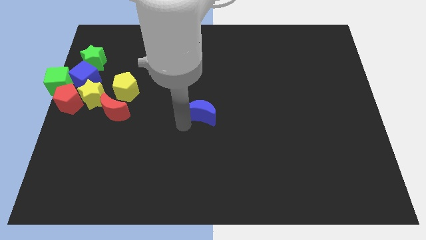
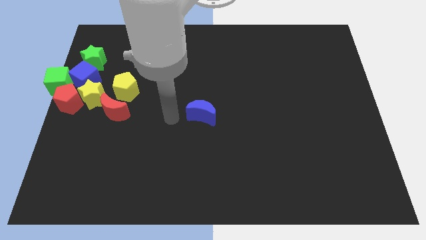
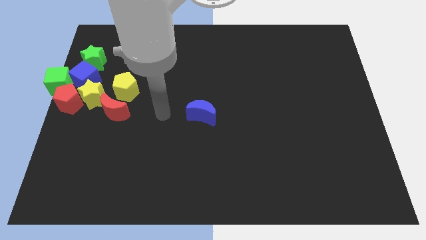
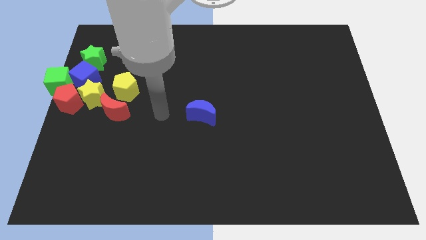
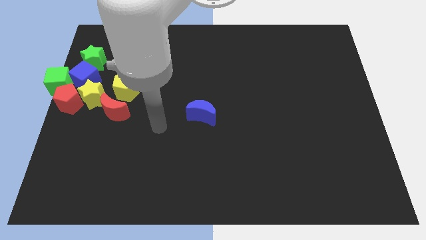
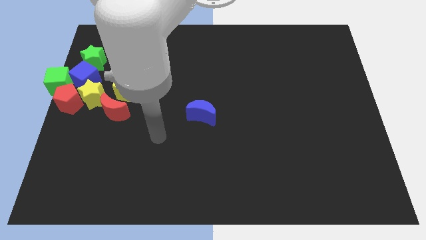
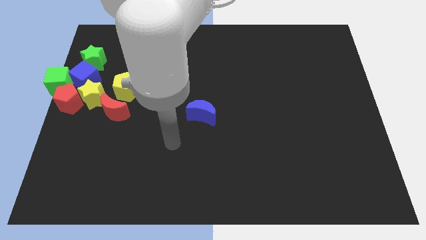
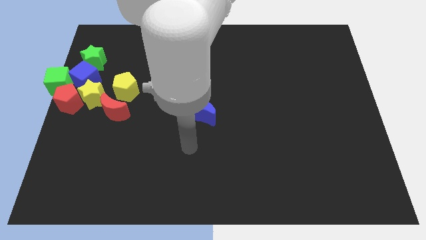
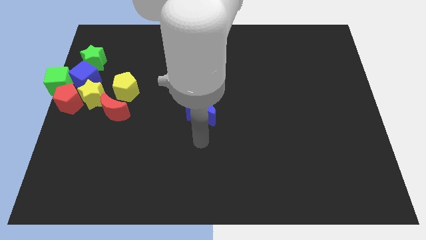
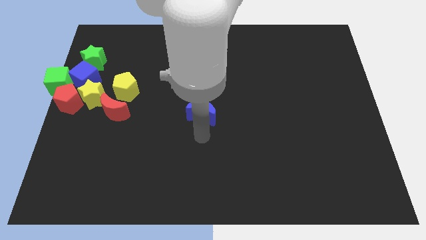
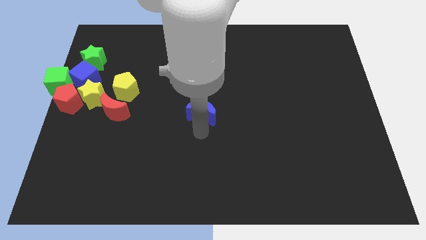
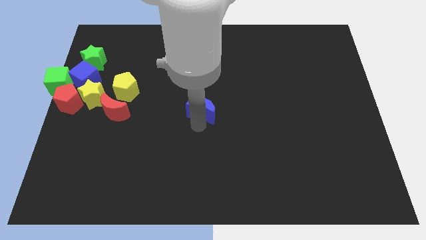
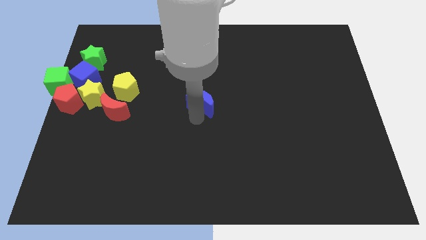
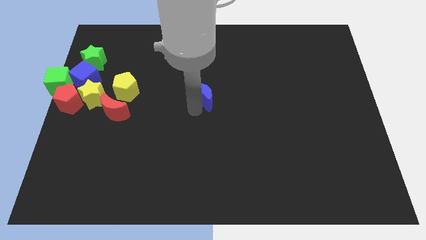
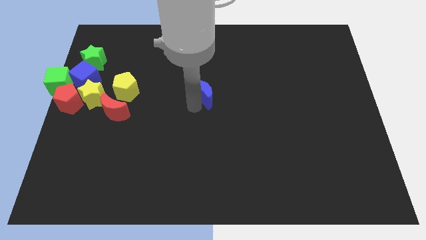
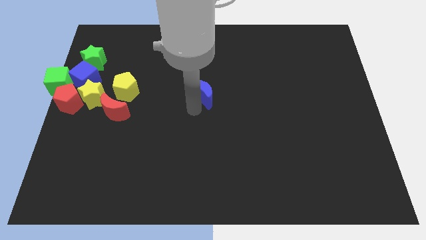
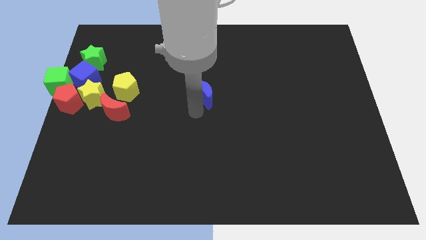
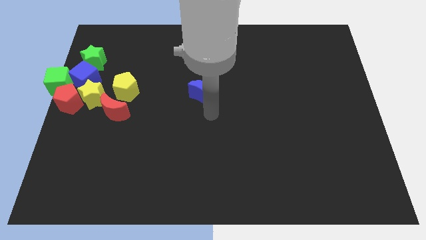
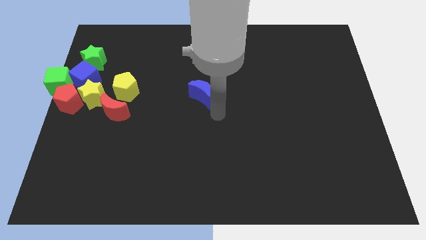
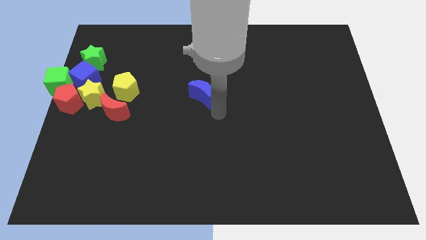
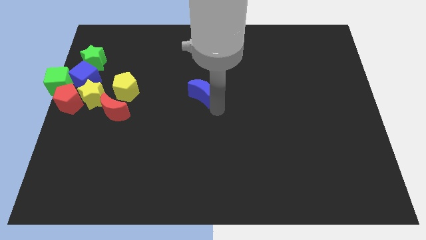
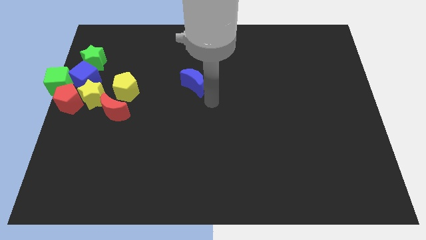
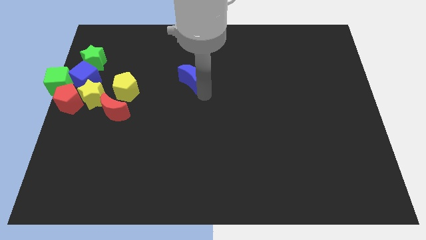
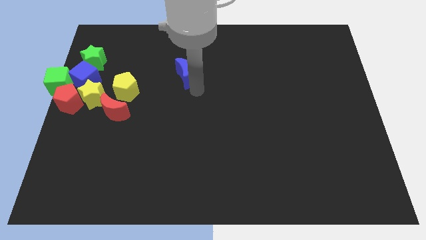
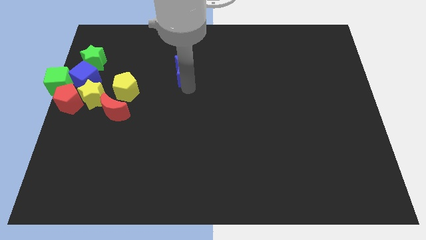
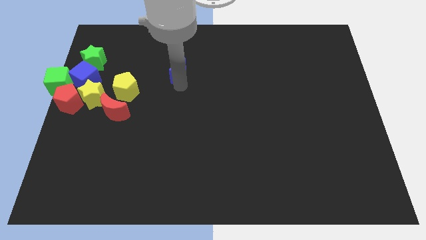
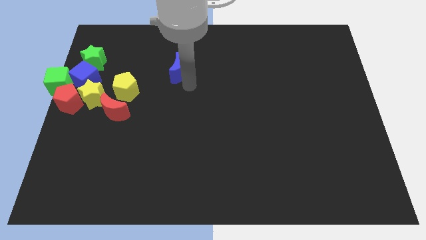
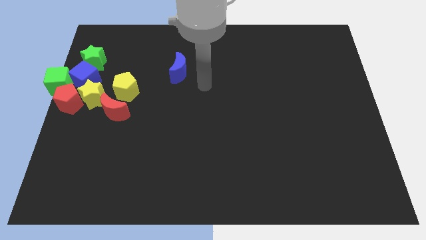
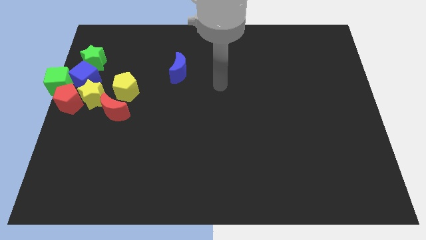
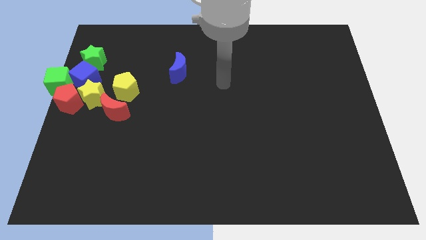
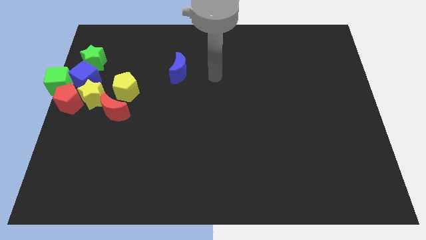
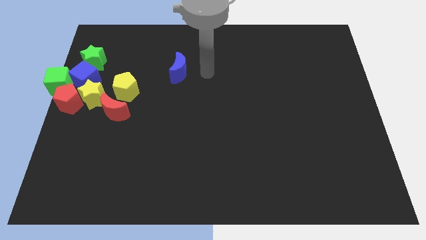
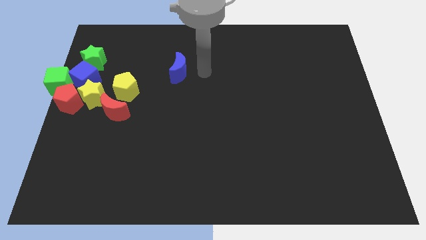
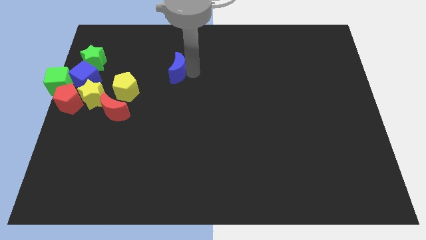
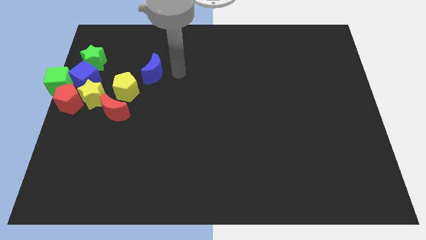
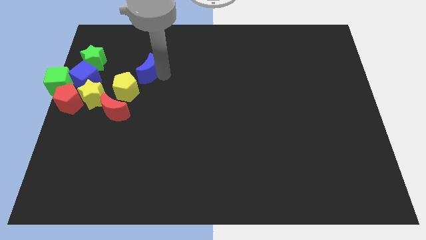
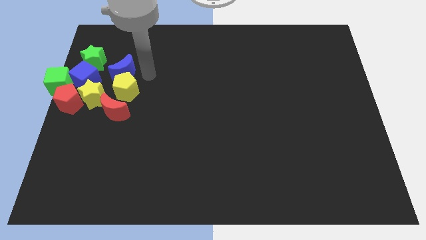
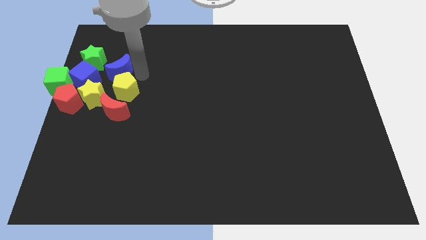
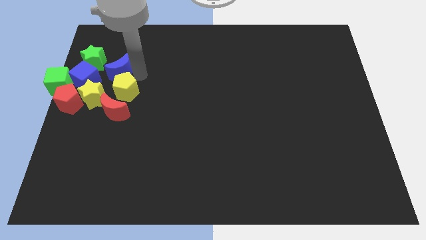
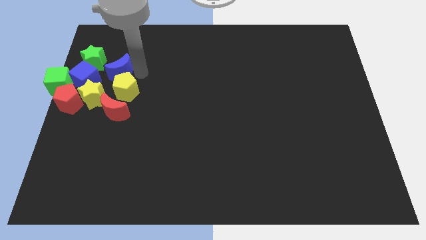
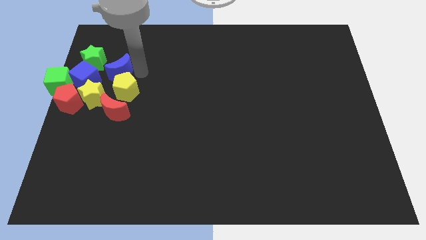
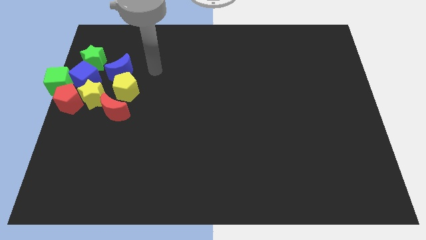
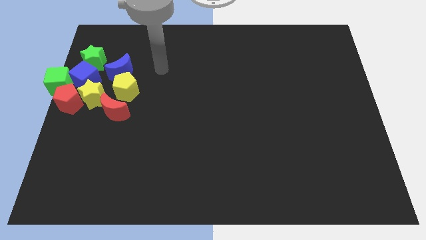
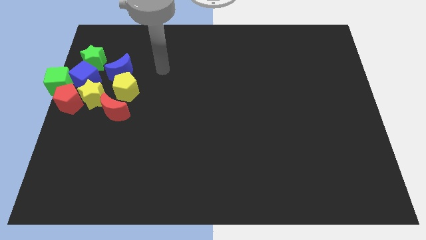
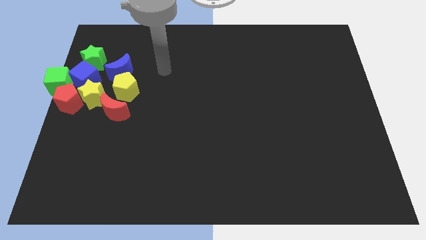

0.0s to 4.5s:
move the blue moon into the group of blocks

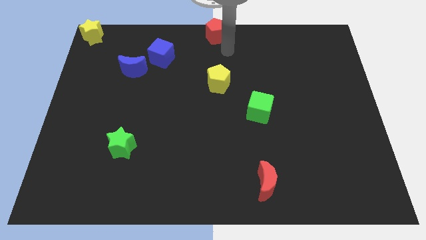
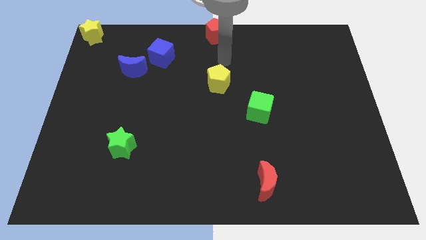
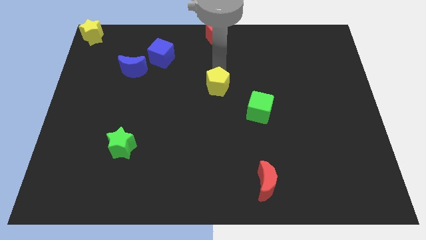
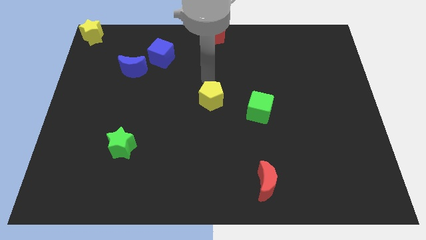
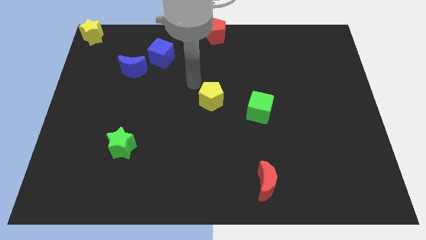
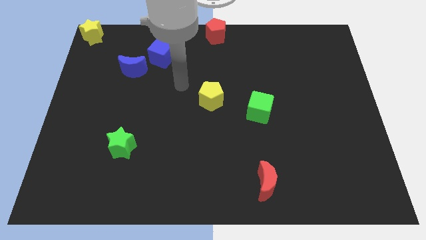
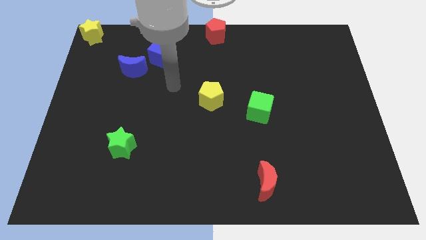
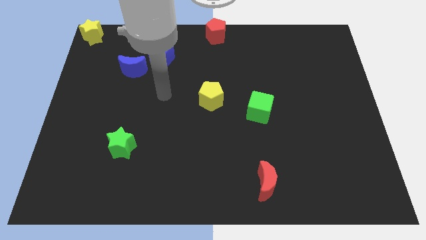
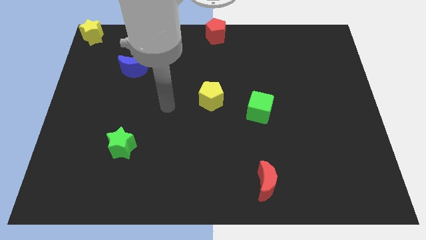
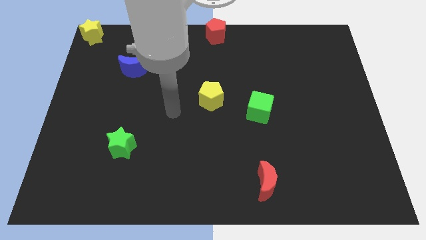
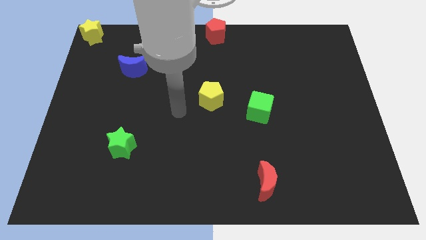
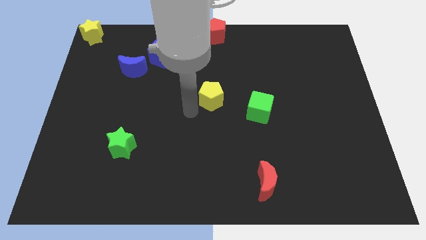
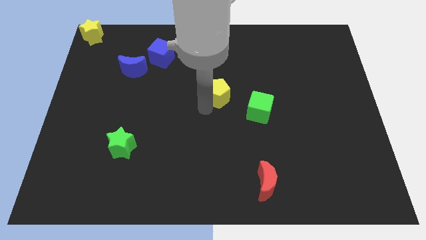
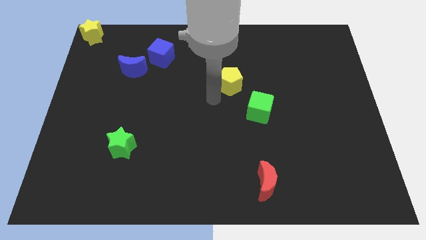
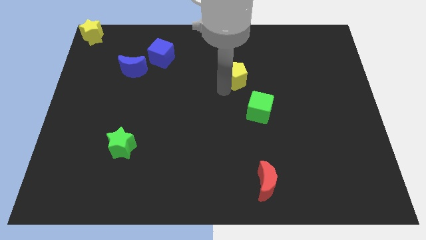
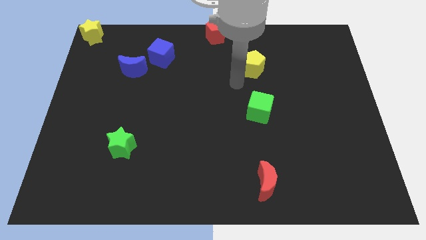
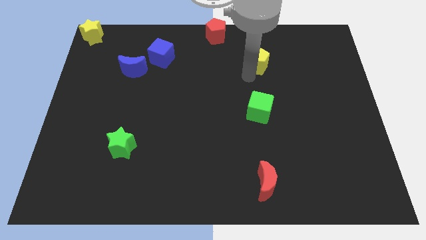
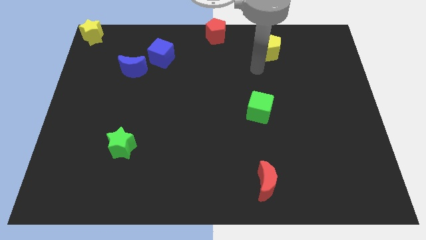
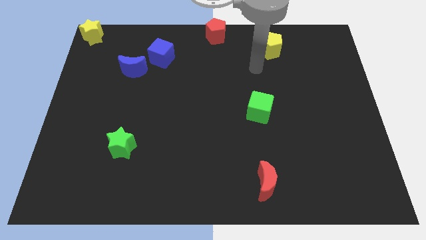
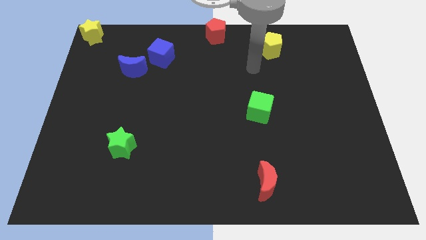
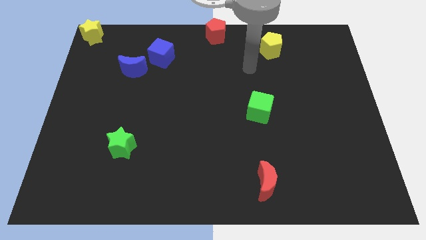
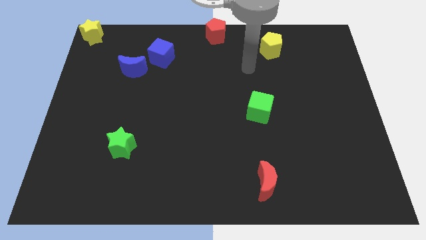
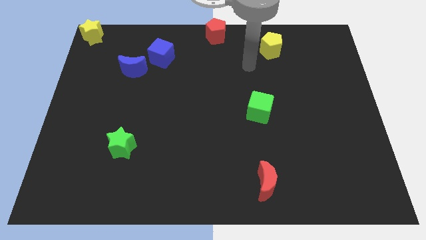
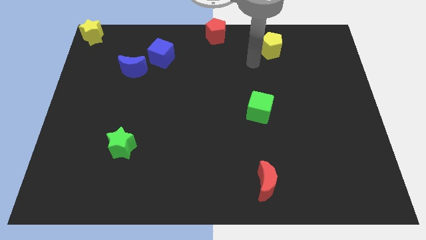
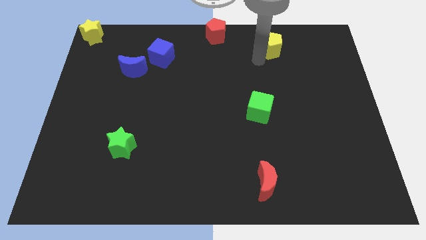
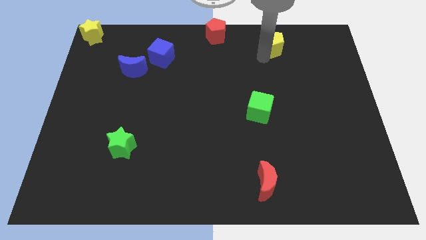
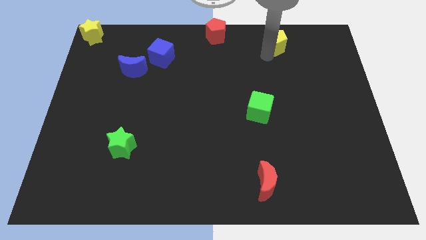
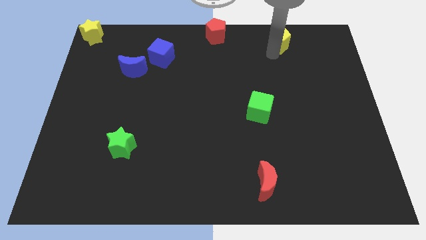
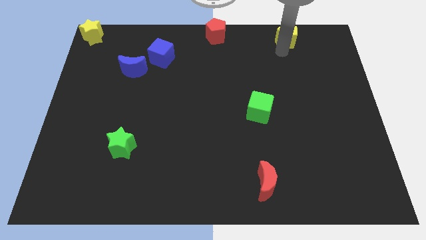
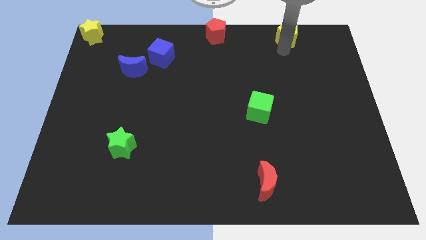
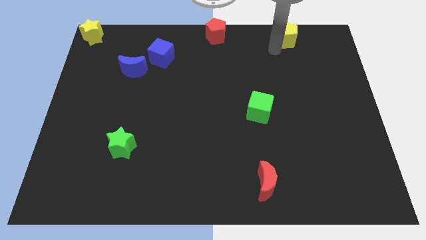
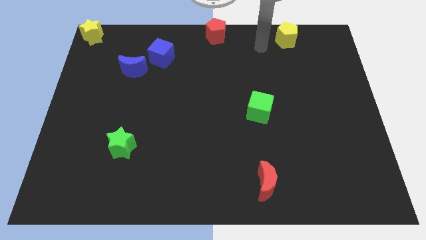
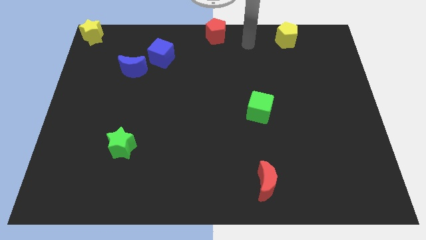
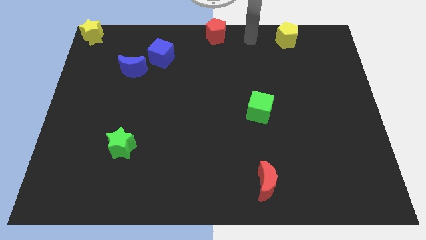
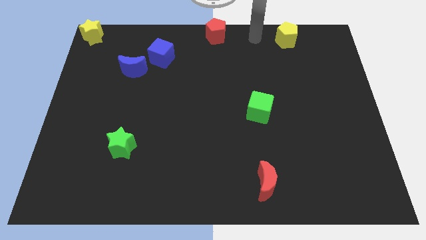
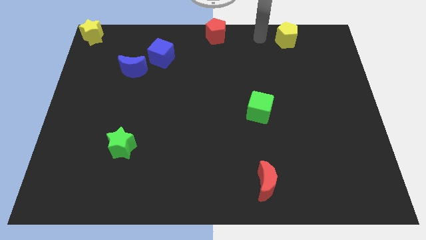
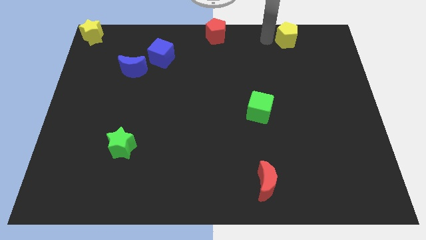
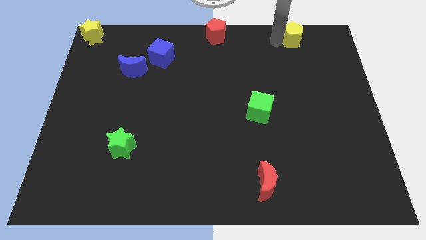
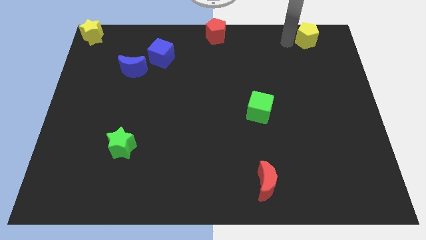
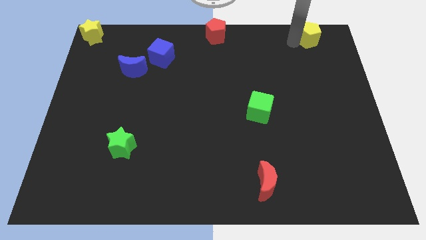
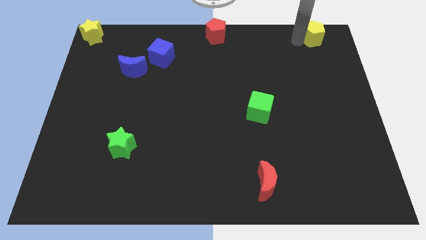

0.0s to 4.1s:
push the yellow pentagon towards the top right

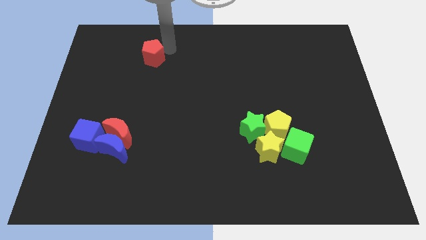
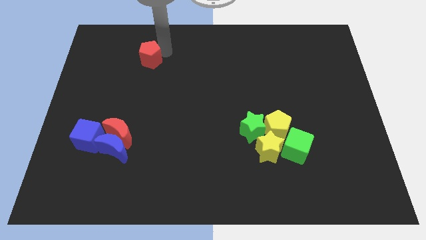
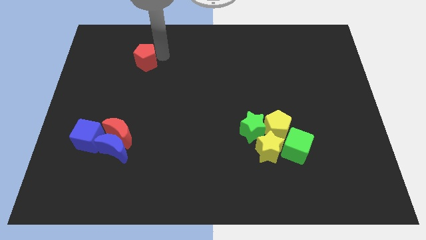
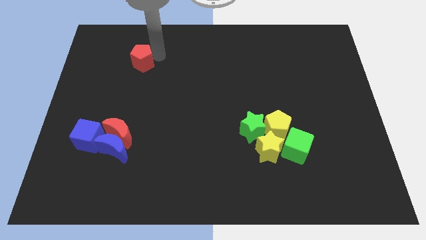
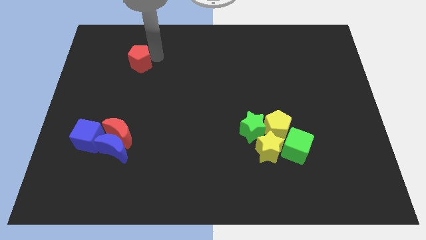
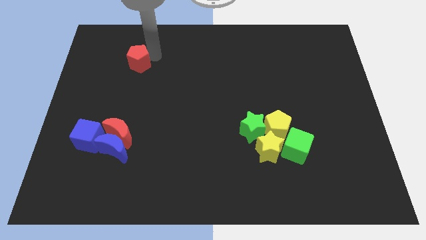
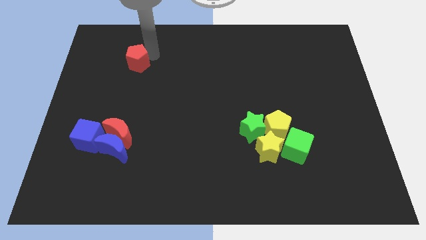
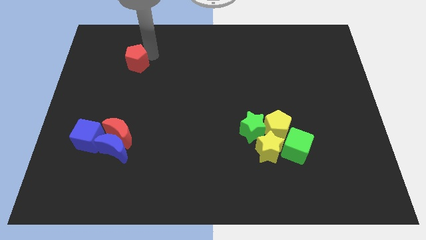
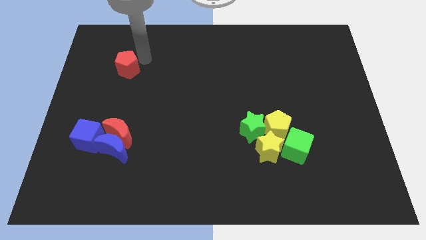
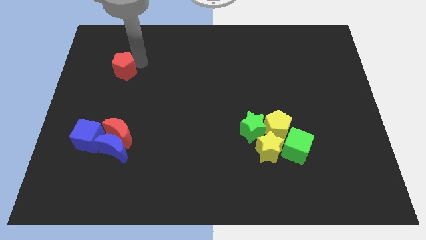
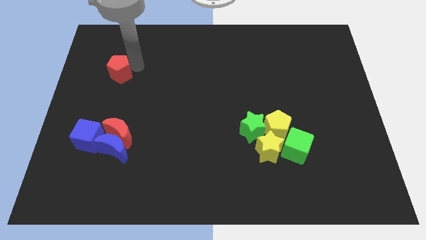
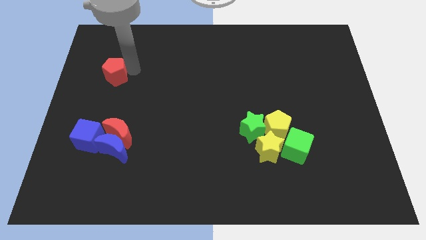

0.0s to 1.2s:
place the red pentagon vertically above the red crescent
